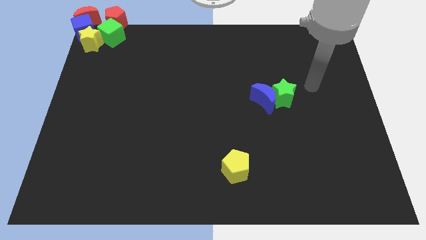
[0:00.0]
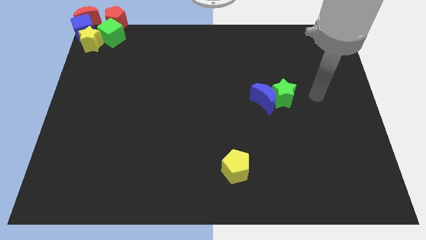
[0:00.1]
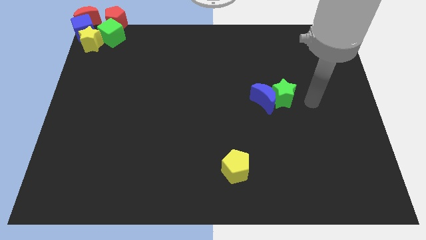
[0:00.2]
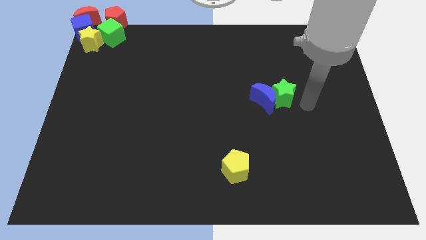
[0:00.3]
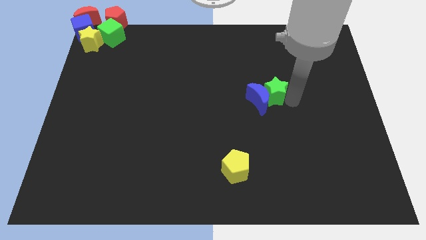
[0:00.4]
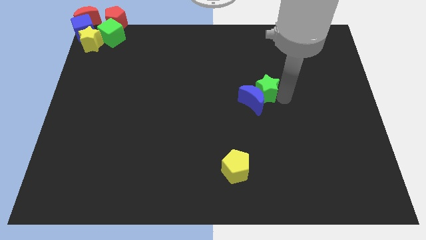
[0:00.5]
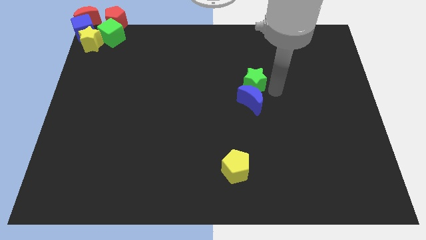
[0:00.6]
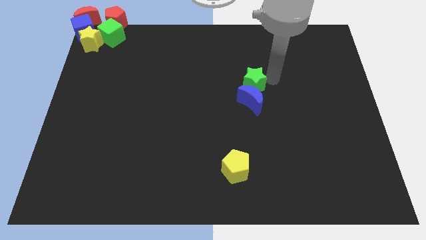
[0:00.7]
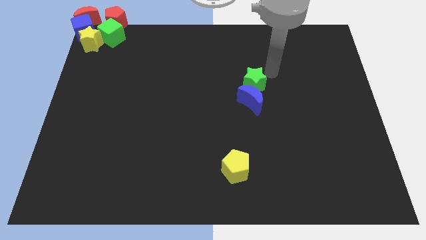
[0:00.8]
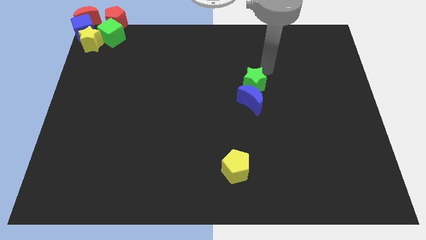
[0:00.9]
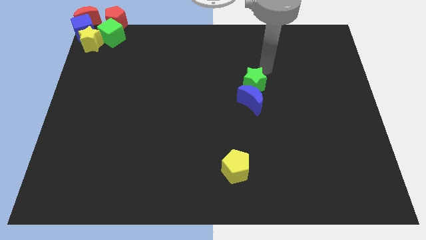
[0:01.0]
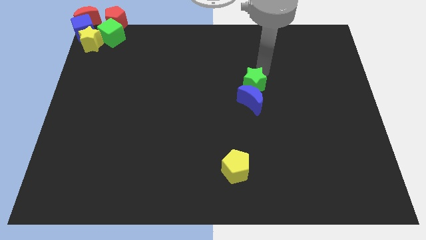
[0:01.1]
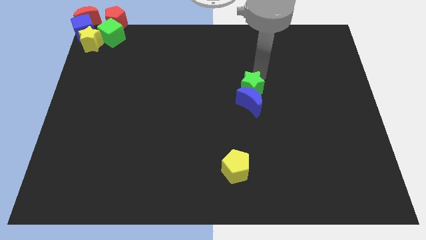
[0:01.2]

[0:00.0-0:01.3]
move the green star to the top side of the blue moon

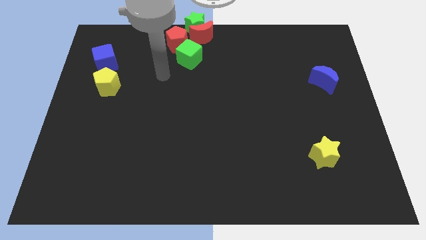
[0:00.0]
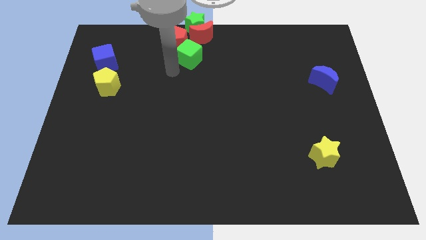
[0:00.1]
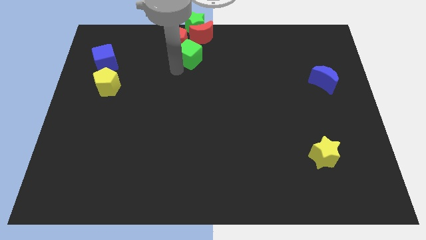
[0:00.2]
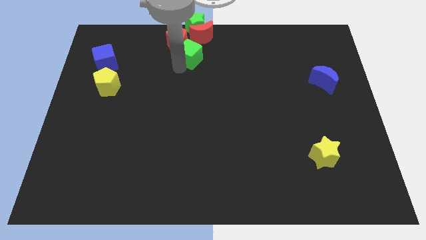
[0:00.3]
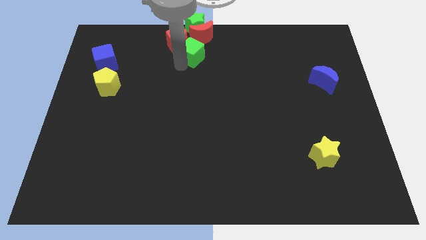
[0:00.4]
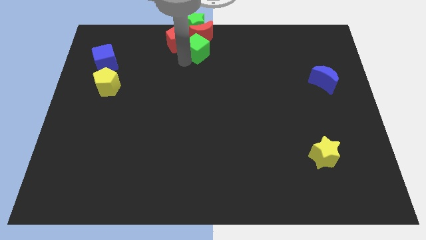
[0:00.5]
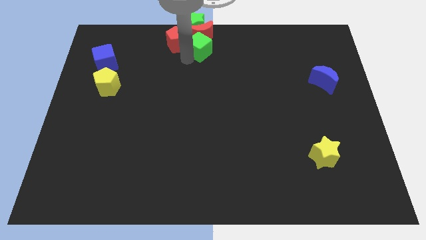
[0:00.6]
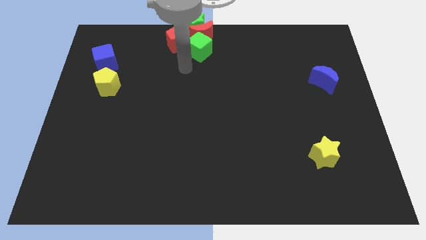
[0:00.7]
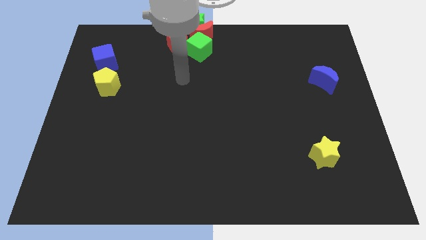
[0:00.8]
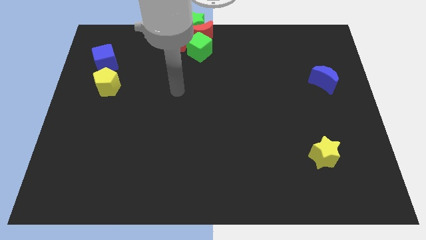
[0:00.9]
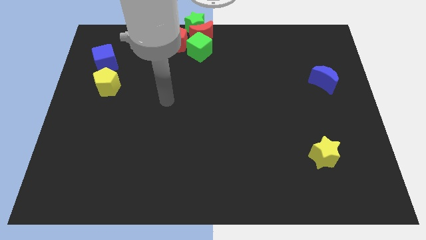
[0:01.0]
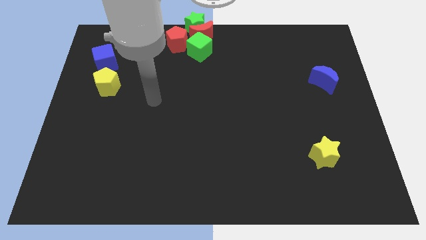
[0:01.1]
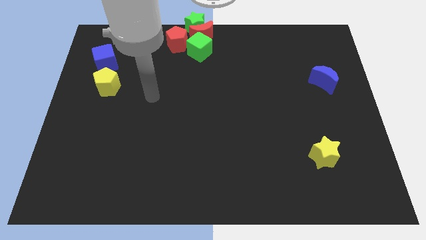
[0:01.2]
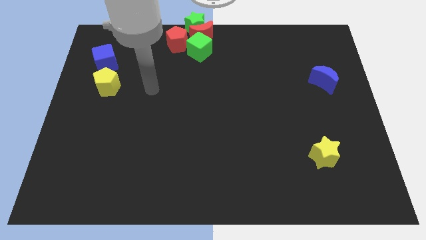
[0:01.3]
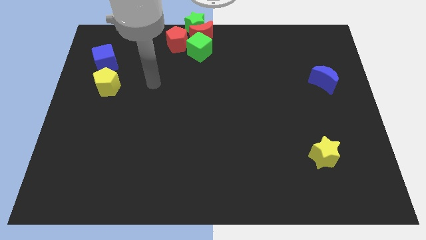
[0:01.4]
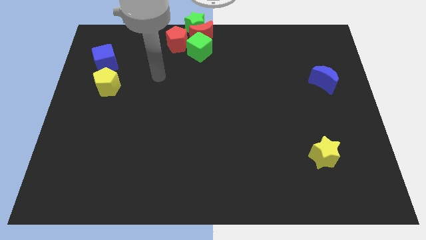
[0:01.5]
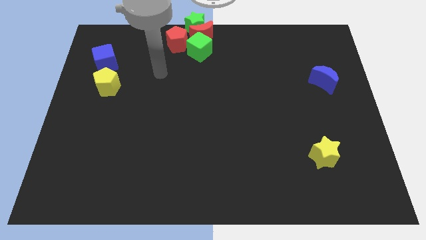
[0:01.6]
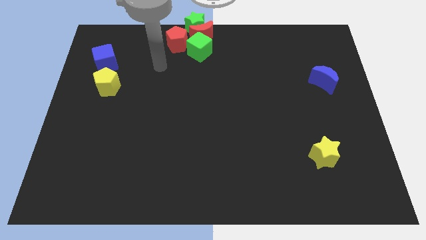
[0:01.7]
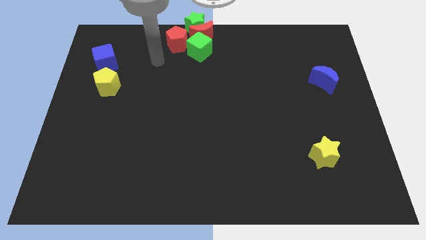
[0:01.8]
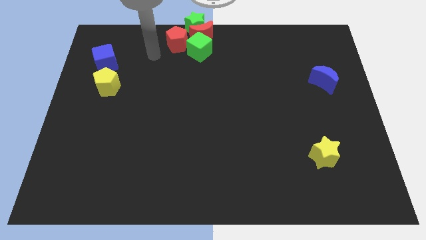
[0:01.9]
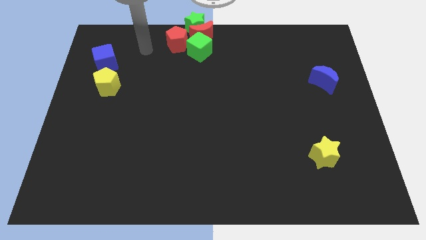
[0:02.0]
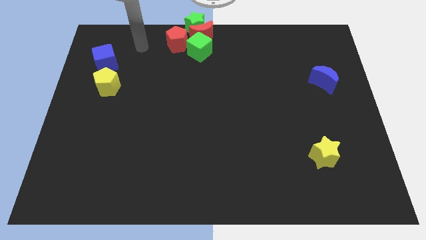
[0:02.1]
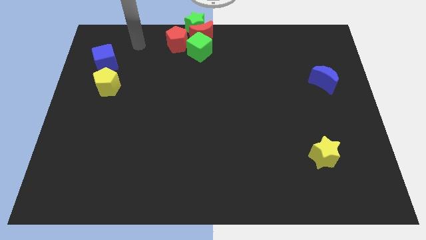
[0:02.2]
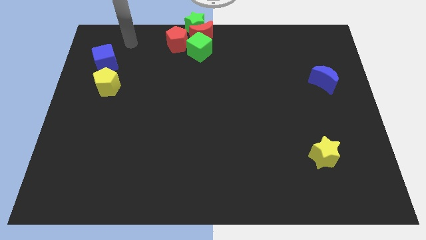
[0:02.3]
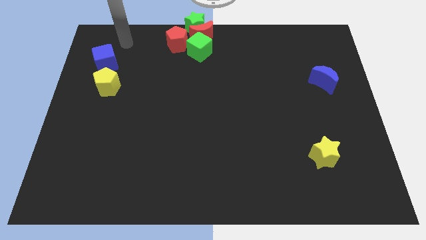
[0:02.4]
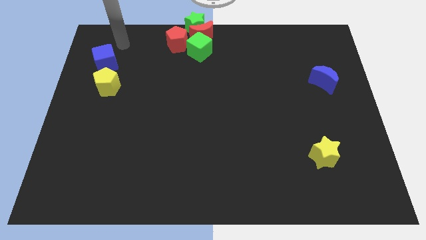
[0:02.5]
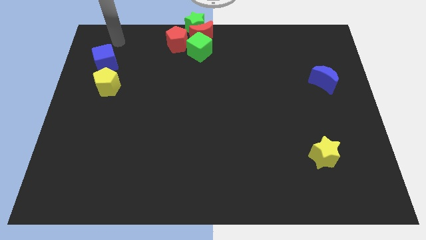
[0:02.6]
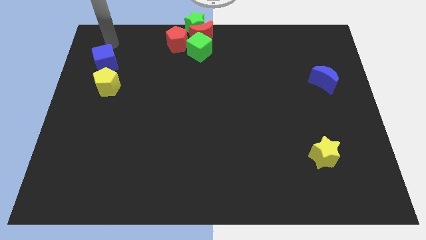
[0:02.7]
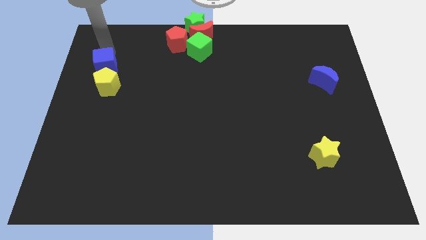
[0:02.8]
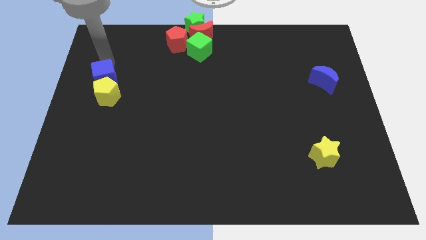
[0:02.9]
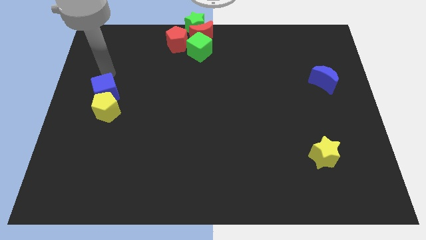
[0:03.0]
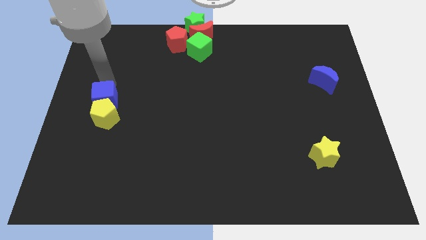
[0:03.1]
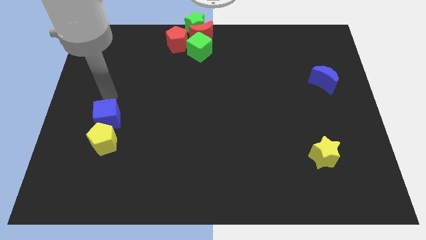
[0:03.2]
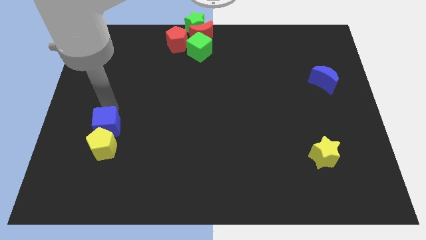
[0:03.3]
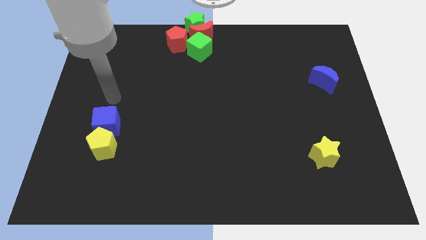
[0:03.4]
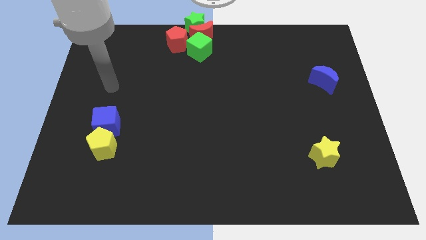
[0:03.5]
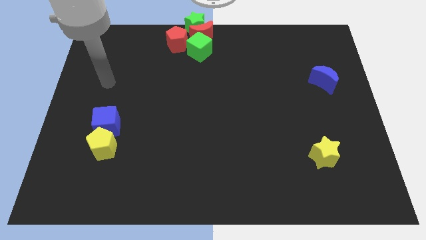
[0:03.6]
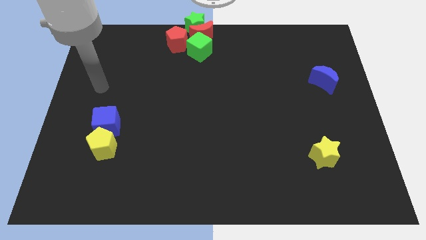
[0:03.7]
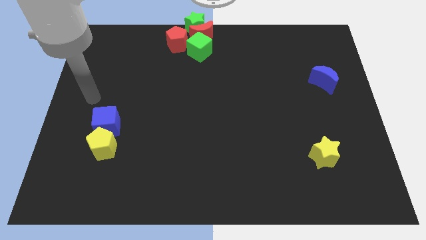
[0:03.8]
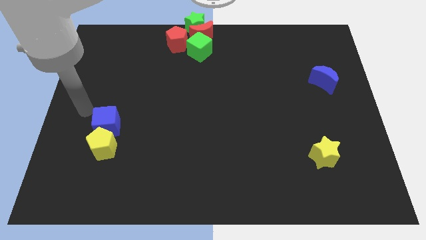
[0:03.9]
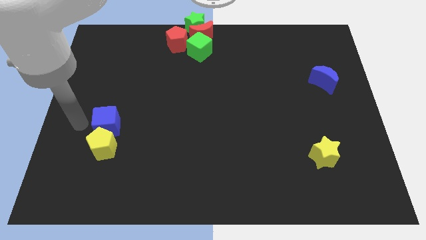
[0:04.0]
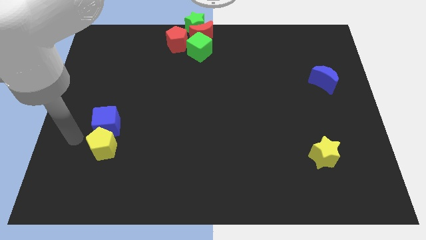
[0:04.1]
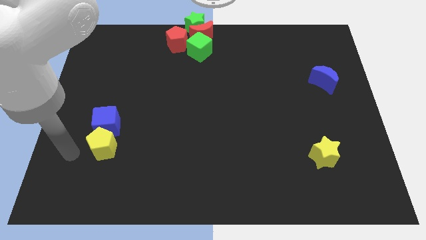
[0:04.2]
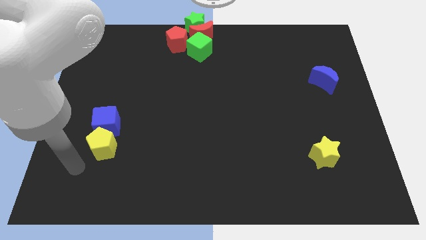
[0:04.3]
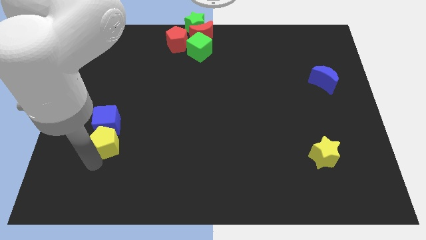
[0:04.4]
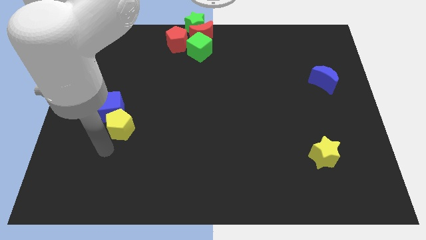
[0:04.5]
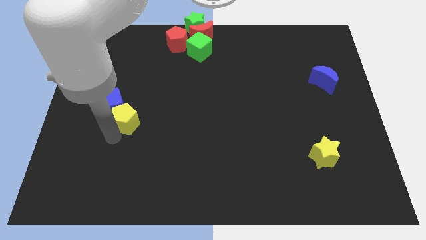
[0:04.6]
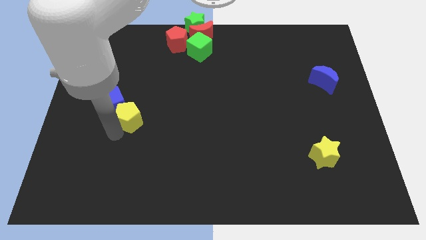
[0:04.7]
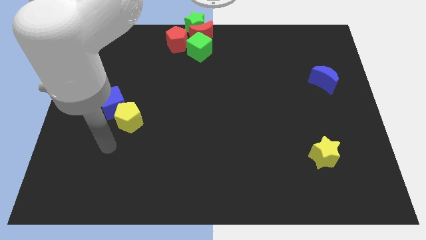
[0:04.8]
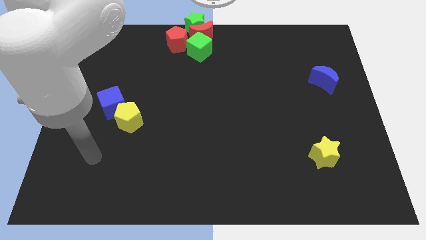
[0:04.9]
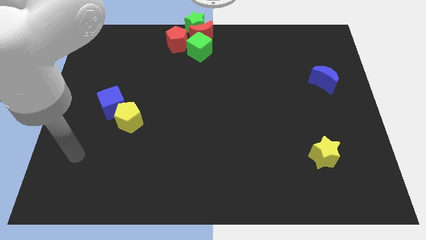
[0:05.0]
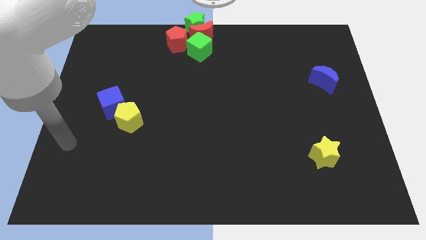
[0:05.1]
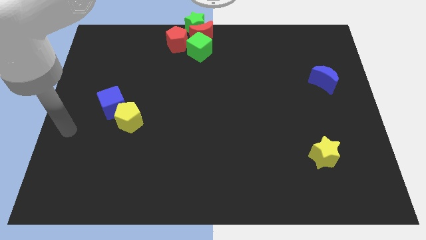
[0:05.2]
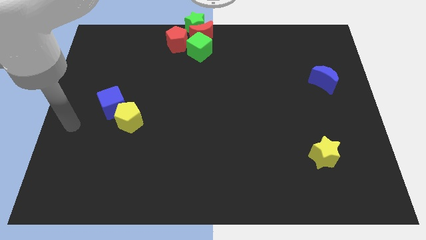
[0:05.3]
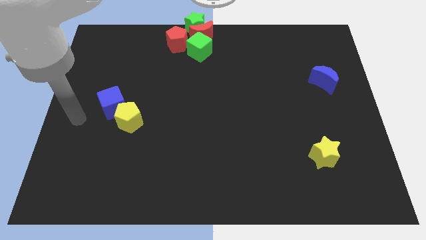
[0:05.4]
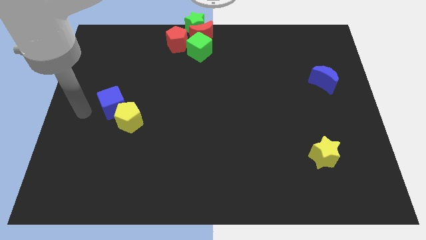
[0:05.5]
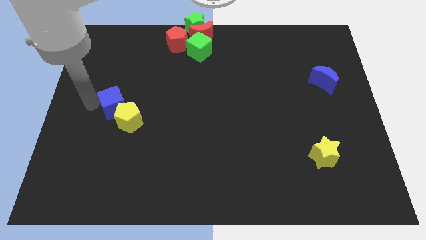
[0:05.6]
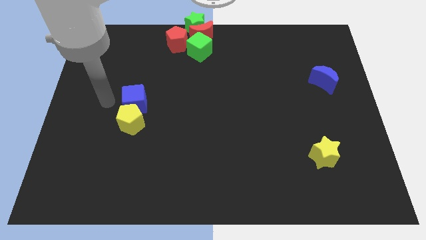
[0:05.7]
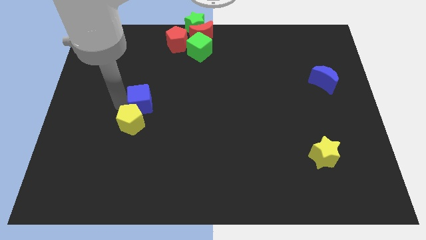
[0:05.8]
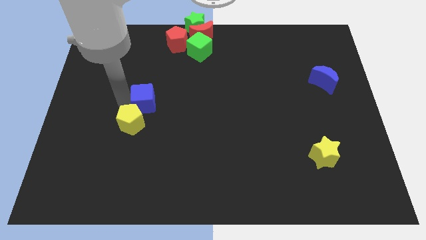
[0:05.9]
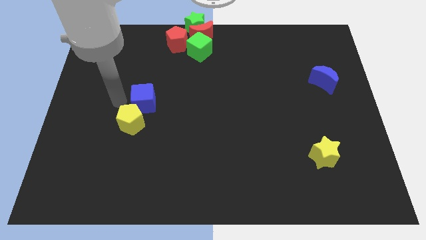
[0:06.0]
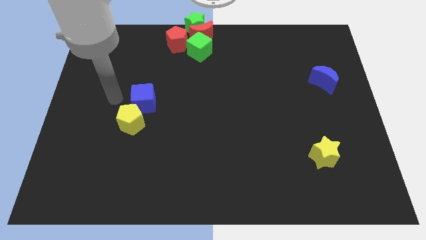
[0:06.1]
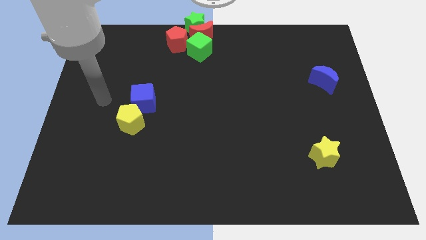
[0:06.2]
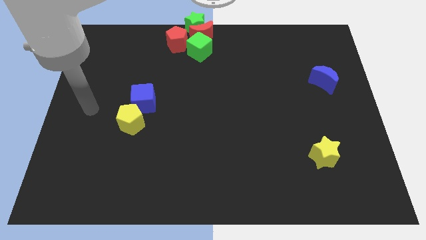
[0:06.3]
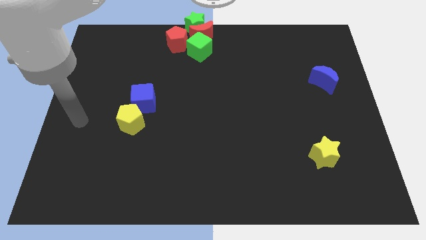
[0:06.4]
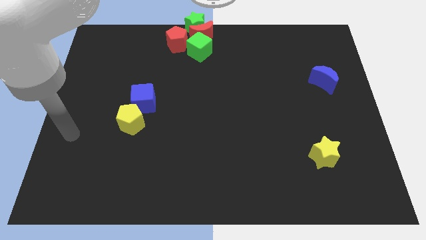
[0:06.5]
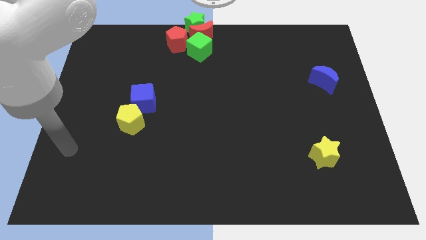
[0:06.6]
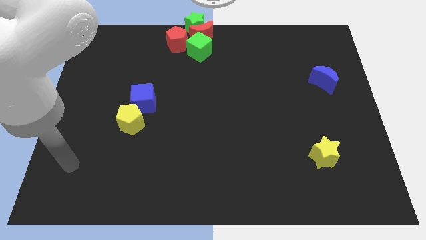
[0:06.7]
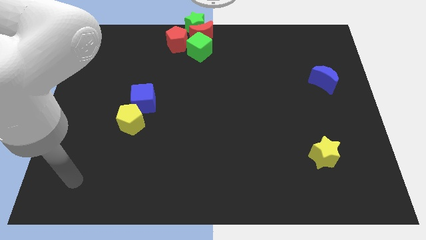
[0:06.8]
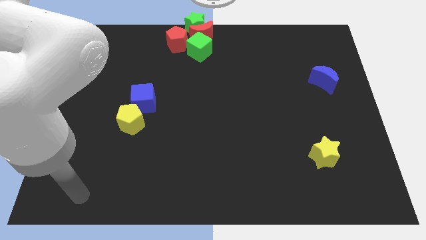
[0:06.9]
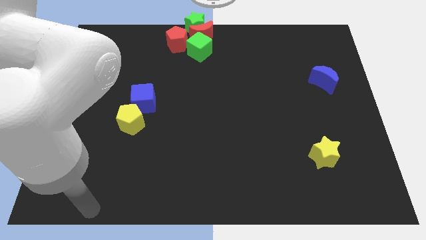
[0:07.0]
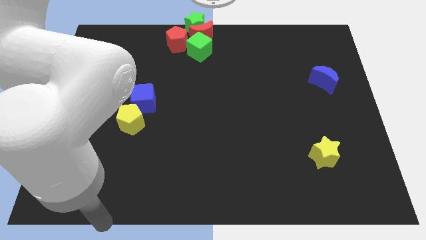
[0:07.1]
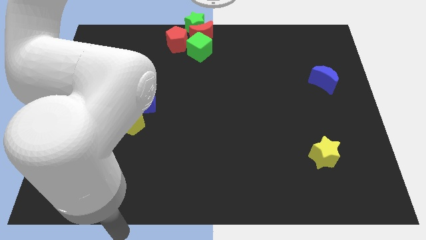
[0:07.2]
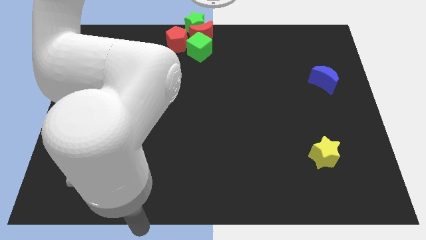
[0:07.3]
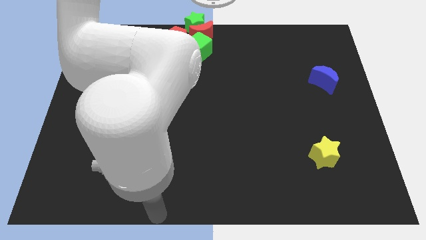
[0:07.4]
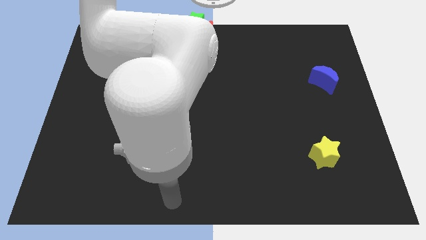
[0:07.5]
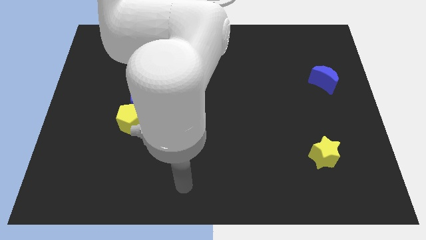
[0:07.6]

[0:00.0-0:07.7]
move blue cube and yellow pentagon slightly right
